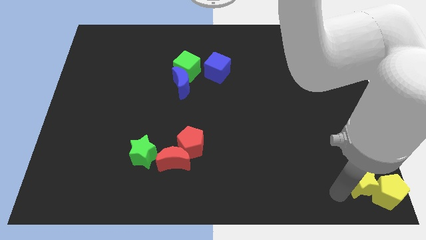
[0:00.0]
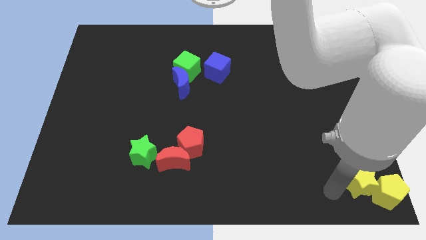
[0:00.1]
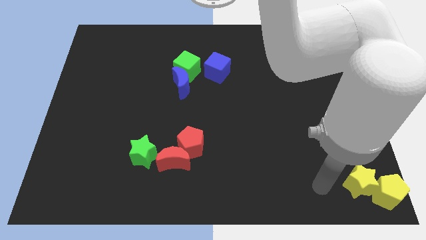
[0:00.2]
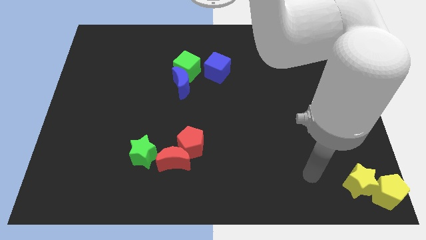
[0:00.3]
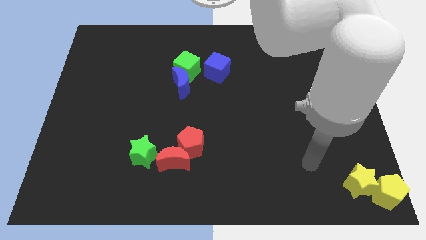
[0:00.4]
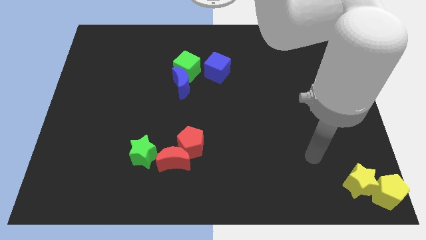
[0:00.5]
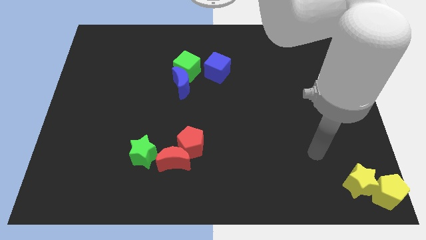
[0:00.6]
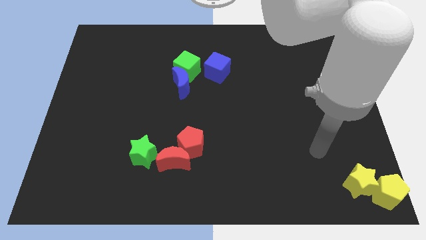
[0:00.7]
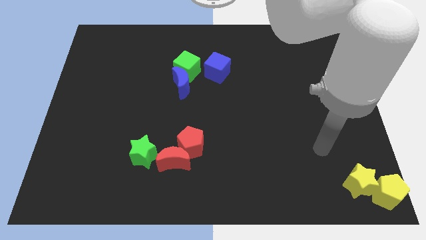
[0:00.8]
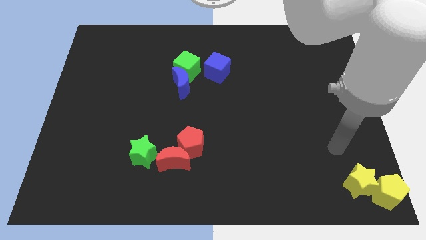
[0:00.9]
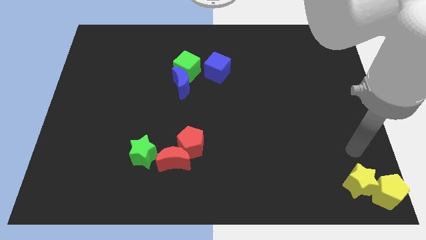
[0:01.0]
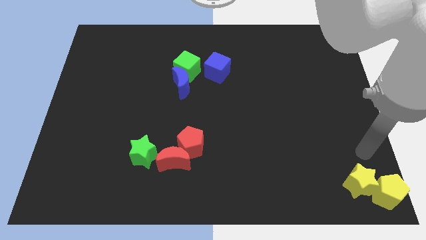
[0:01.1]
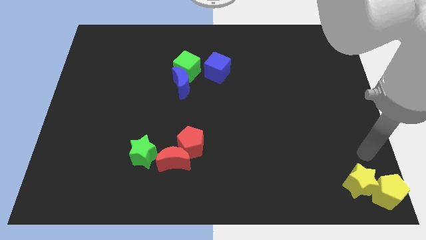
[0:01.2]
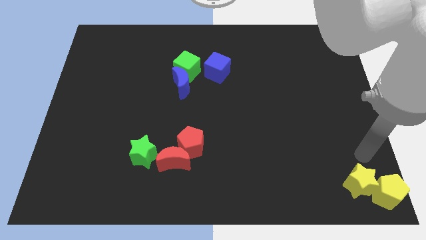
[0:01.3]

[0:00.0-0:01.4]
point your arm above the yellow star

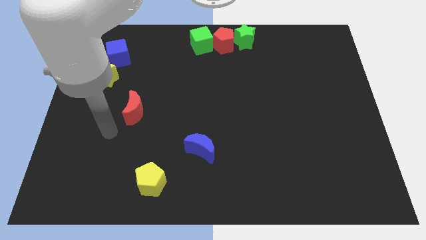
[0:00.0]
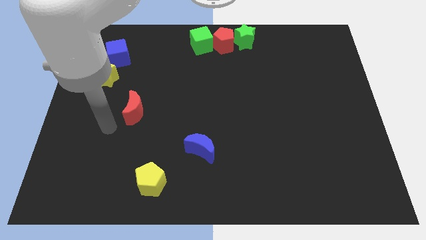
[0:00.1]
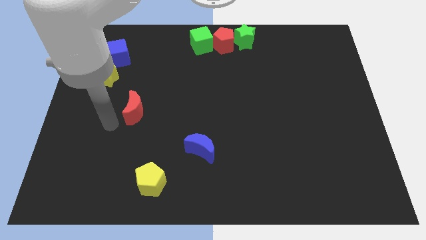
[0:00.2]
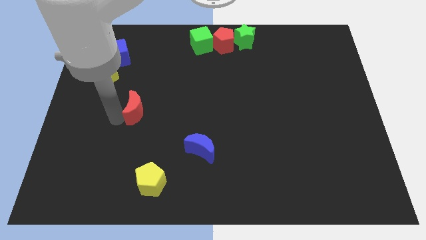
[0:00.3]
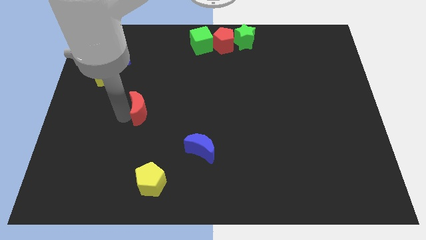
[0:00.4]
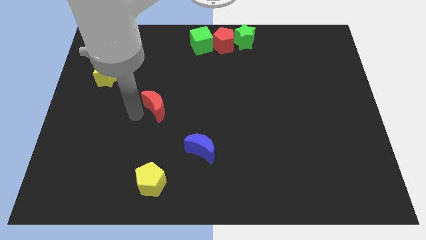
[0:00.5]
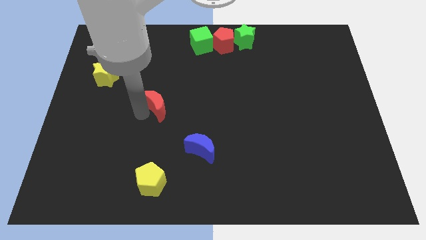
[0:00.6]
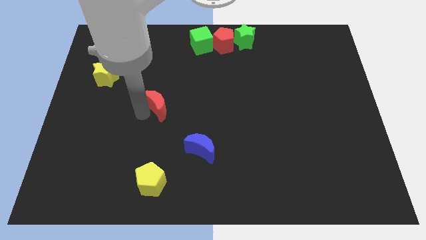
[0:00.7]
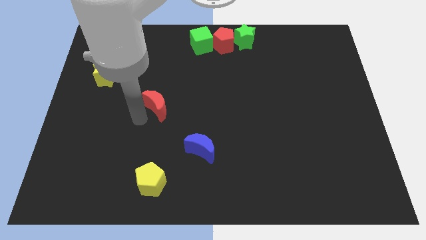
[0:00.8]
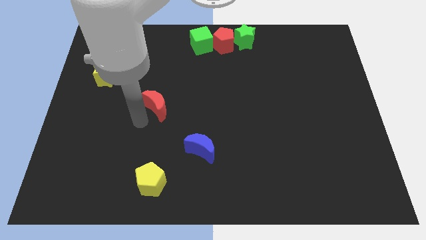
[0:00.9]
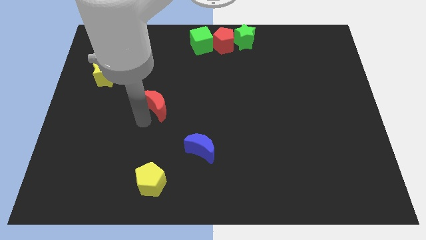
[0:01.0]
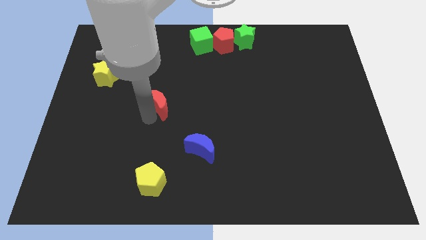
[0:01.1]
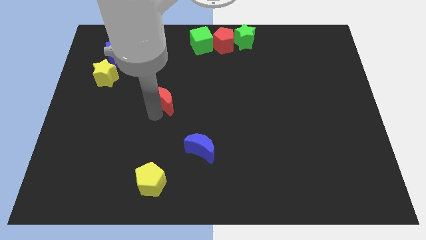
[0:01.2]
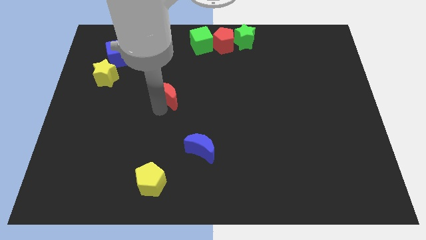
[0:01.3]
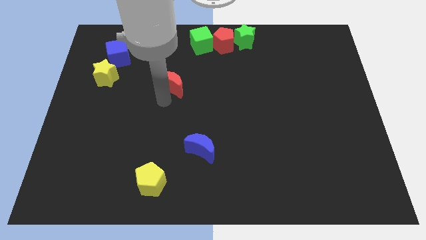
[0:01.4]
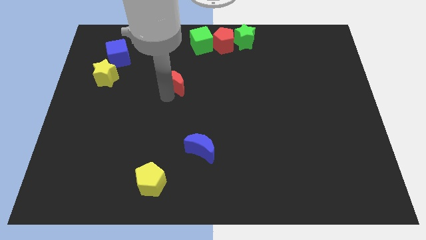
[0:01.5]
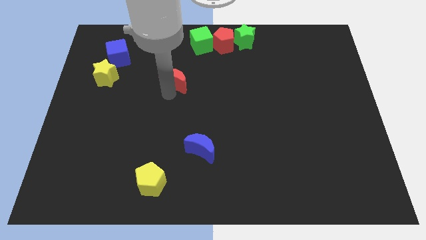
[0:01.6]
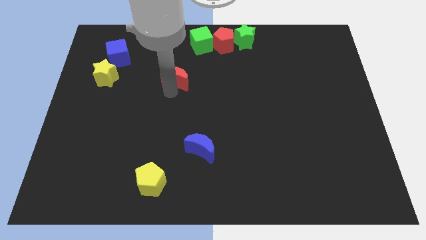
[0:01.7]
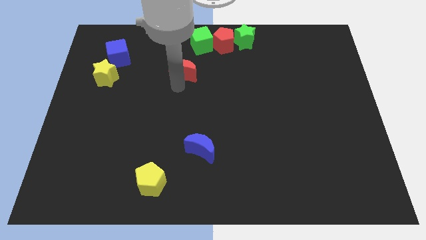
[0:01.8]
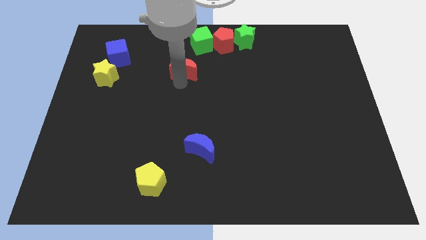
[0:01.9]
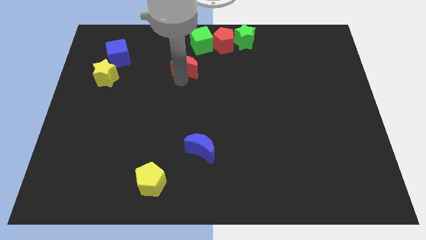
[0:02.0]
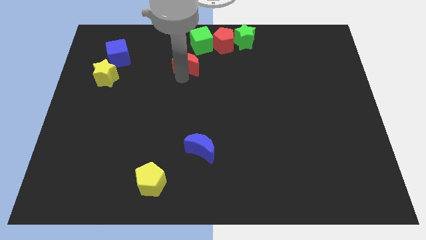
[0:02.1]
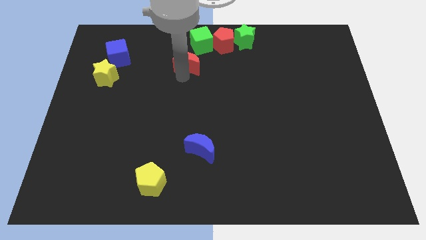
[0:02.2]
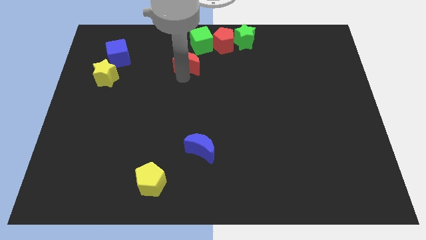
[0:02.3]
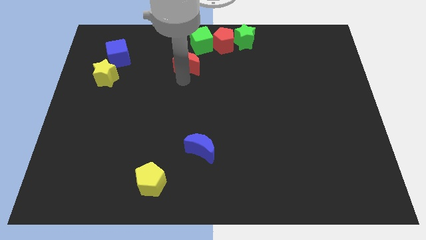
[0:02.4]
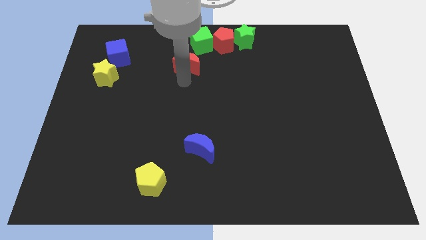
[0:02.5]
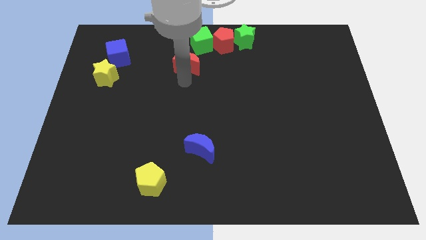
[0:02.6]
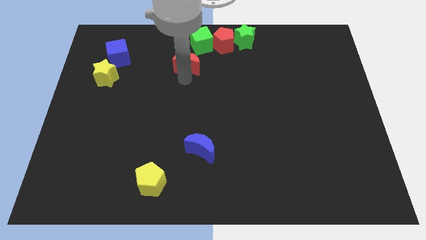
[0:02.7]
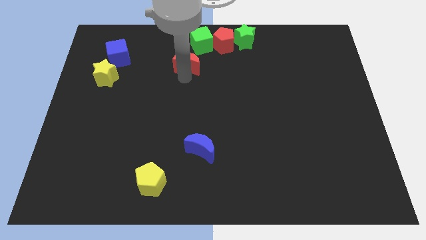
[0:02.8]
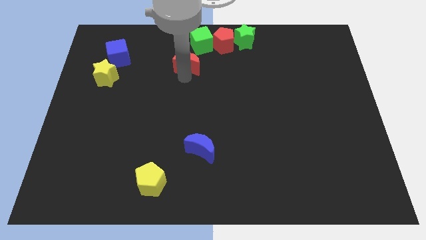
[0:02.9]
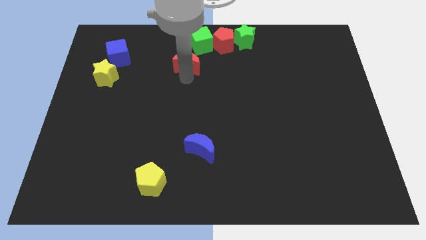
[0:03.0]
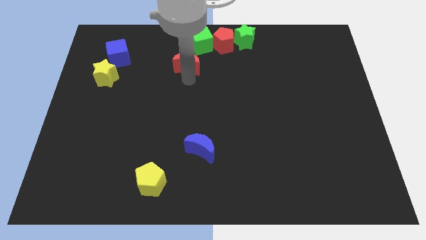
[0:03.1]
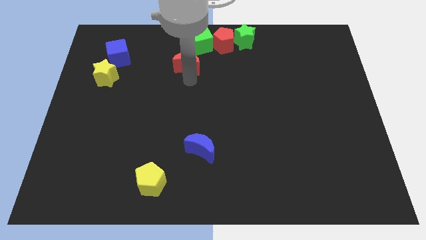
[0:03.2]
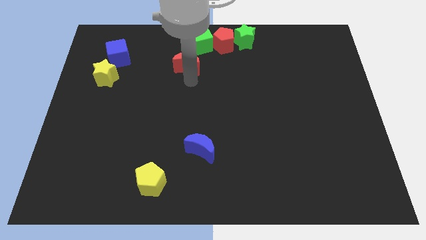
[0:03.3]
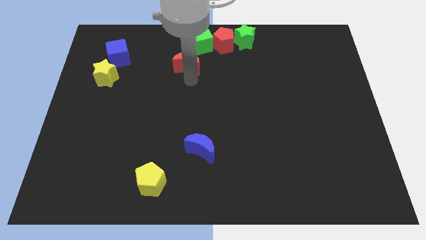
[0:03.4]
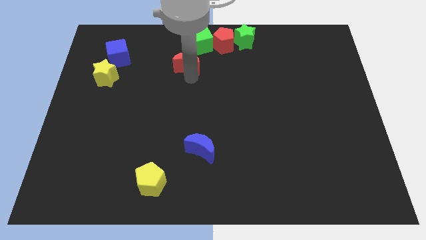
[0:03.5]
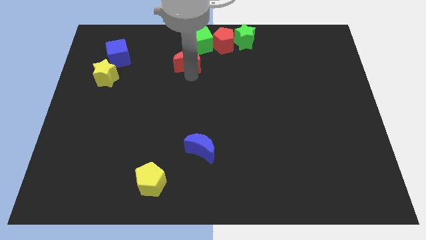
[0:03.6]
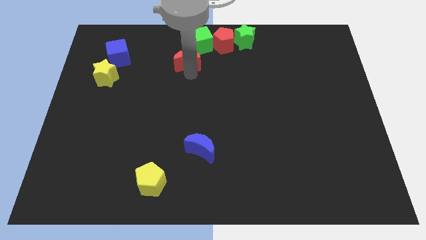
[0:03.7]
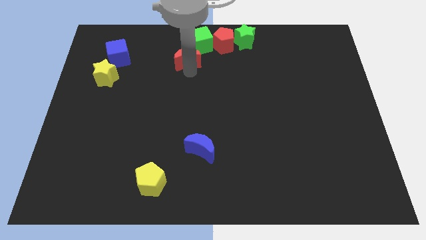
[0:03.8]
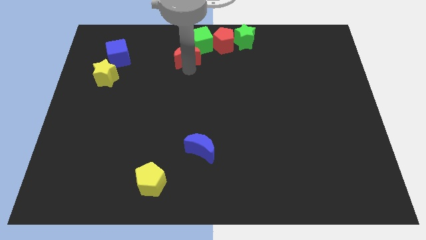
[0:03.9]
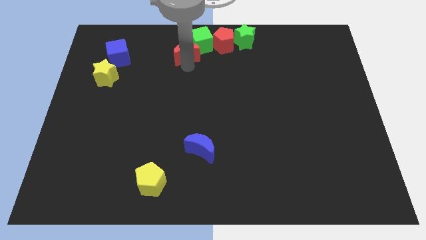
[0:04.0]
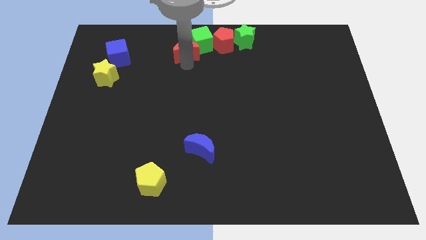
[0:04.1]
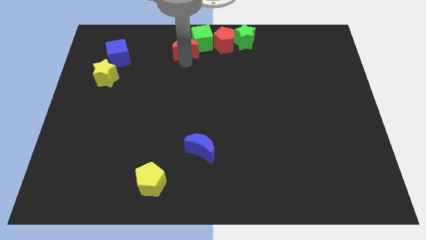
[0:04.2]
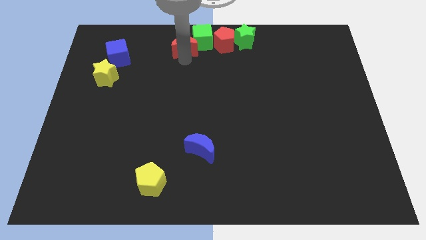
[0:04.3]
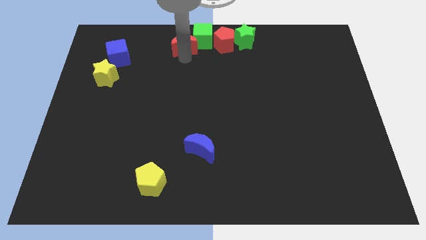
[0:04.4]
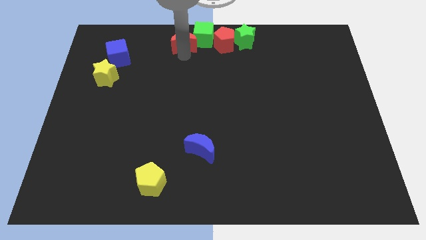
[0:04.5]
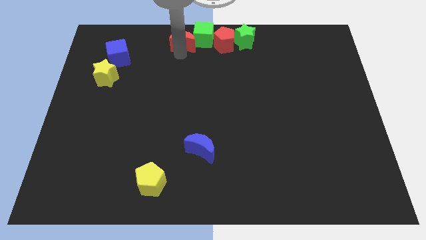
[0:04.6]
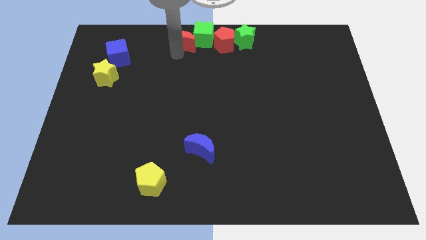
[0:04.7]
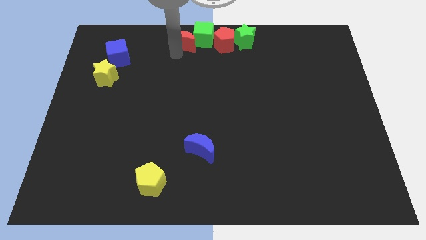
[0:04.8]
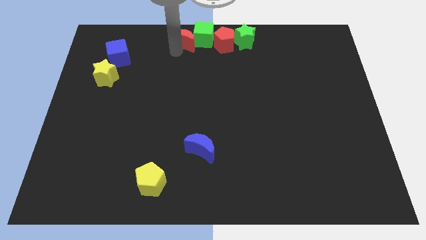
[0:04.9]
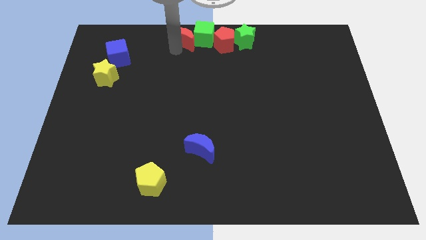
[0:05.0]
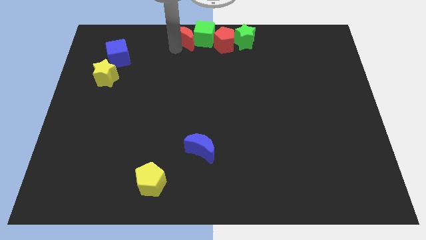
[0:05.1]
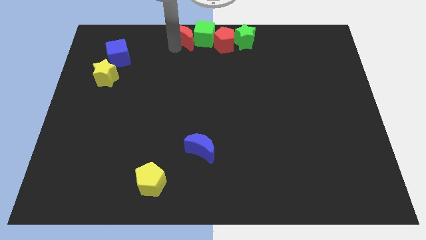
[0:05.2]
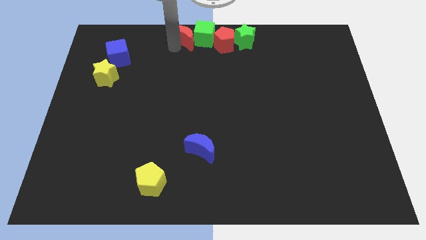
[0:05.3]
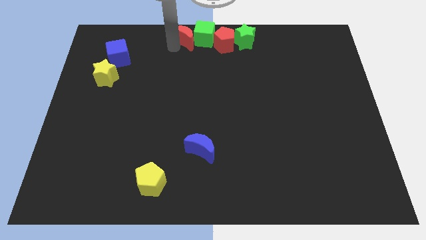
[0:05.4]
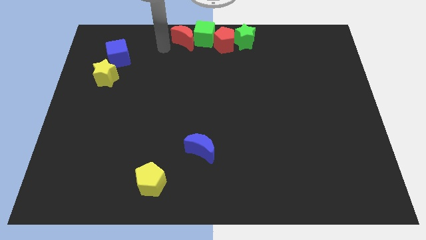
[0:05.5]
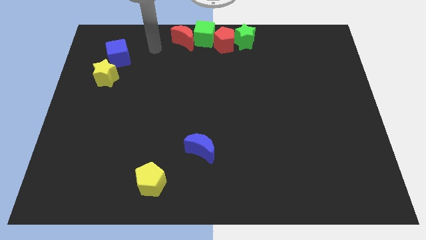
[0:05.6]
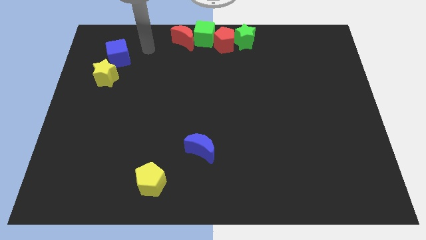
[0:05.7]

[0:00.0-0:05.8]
push the red moon into the green cube

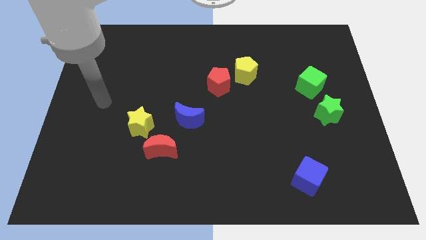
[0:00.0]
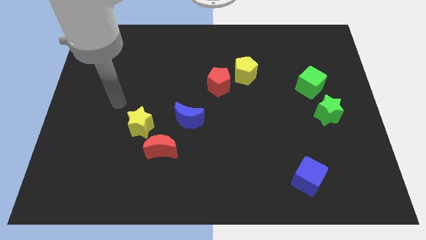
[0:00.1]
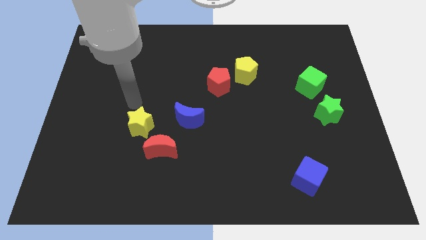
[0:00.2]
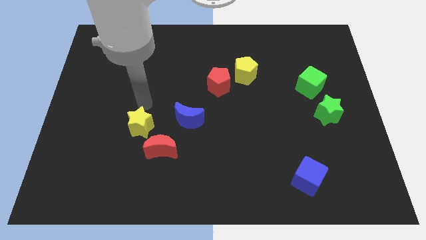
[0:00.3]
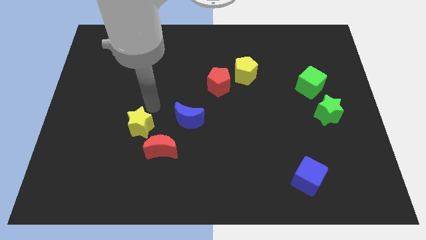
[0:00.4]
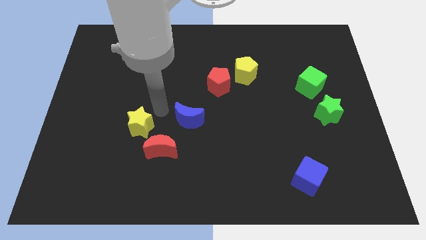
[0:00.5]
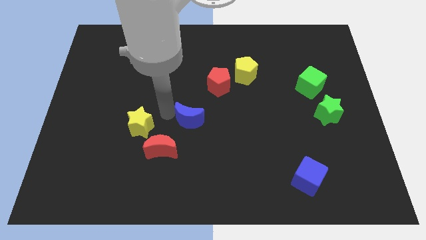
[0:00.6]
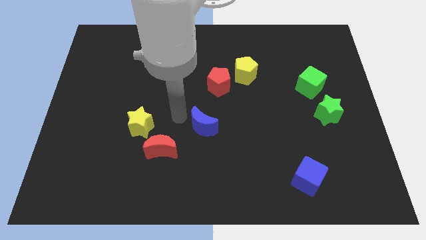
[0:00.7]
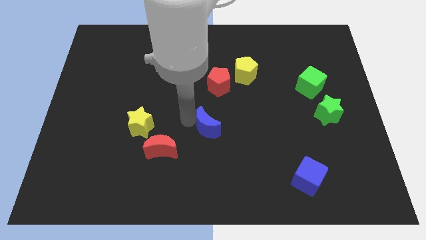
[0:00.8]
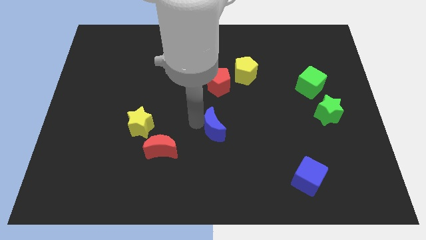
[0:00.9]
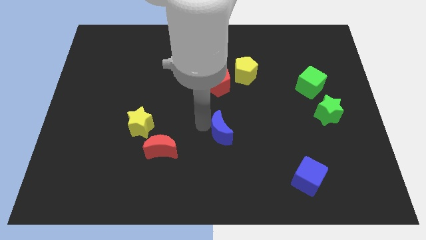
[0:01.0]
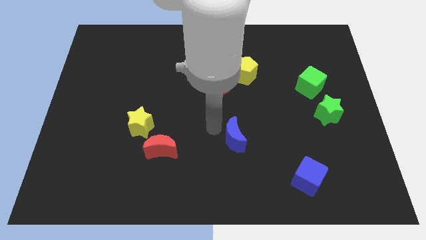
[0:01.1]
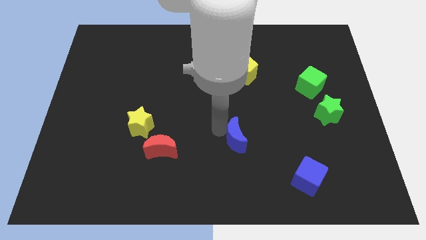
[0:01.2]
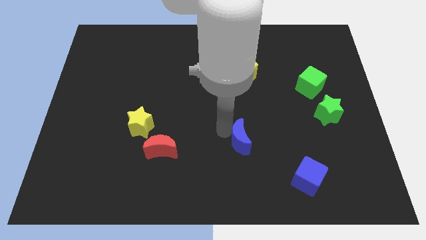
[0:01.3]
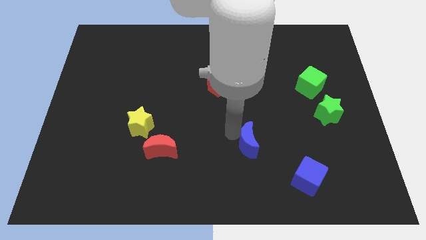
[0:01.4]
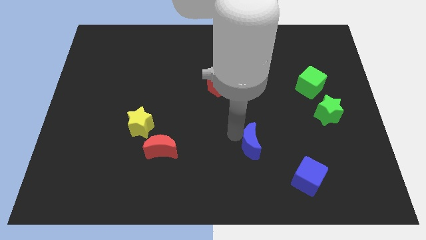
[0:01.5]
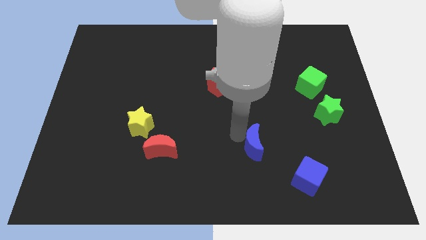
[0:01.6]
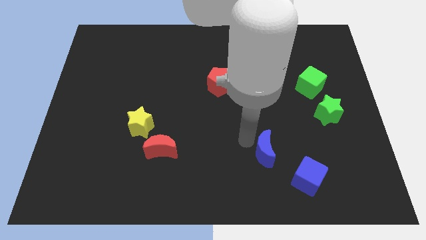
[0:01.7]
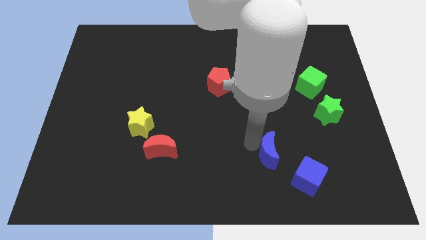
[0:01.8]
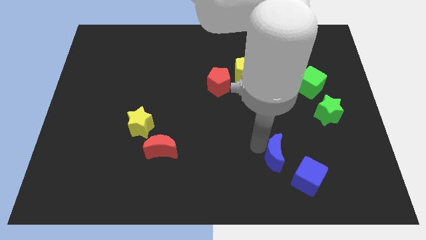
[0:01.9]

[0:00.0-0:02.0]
move the blue crescent towards the blue cube
